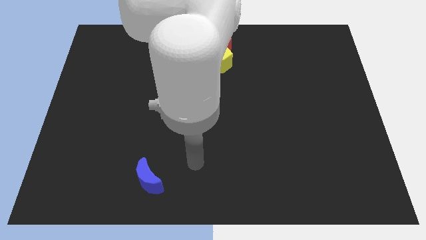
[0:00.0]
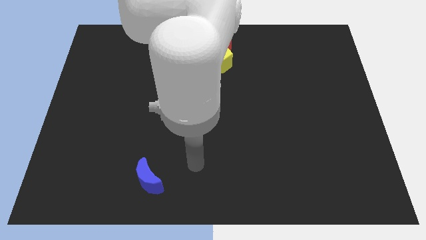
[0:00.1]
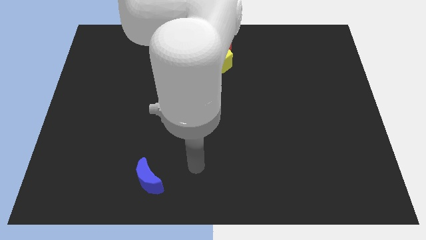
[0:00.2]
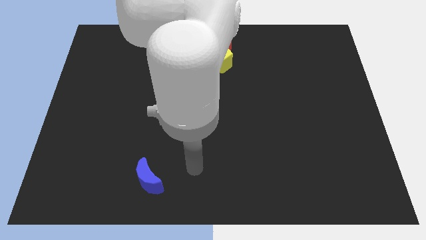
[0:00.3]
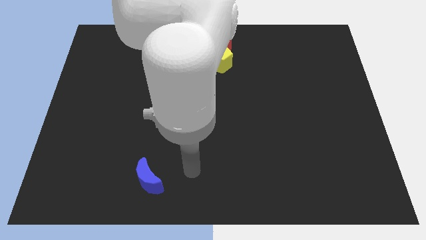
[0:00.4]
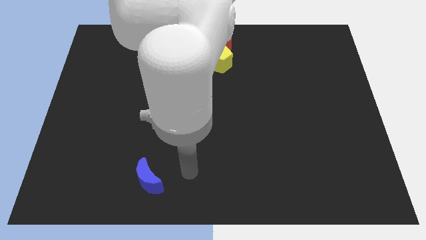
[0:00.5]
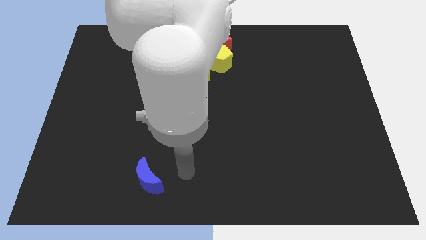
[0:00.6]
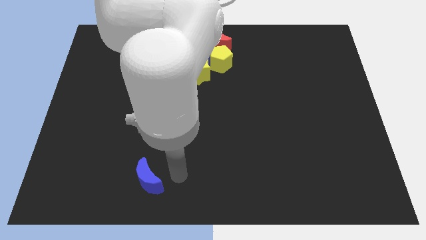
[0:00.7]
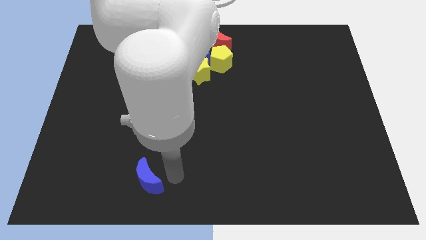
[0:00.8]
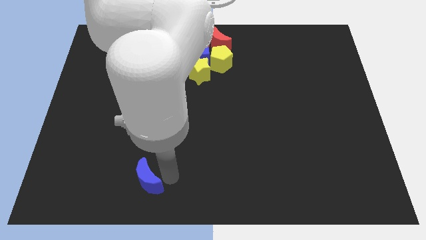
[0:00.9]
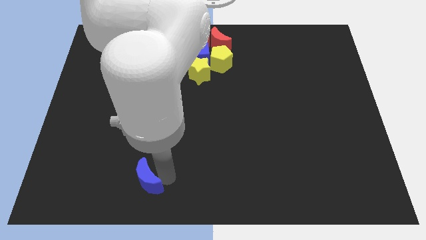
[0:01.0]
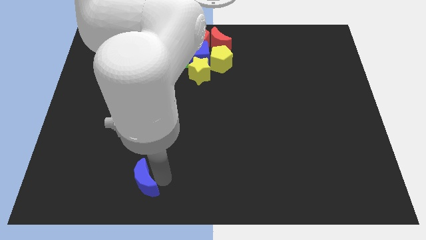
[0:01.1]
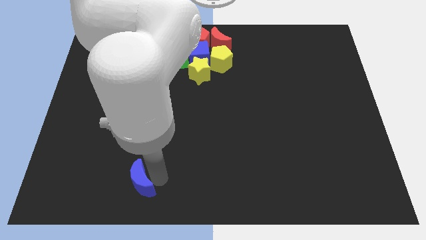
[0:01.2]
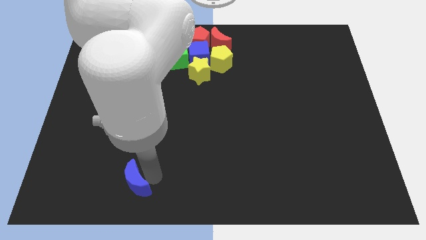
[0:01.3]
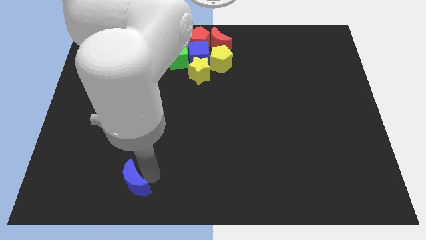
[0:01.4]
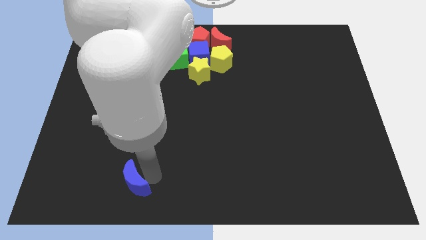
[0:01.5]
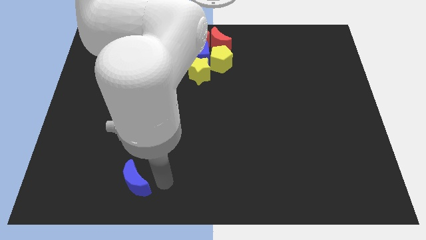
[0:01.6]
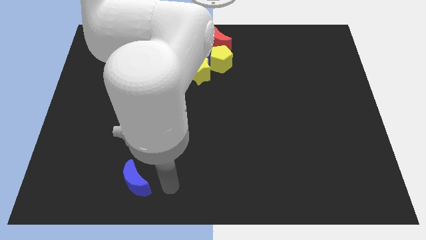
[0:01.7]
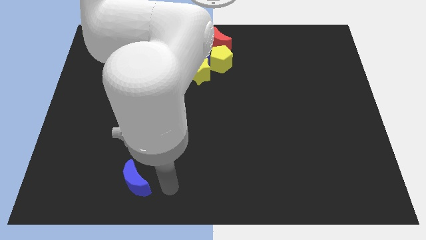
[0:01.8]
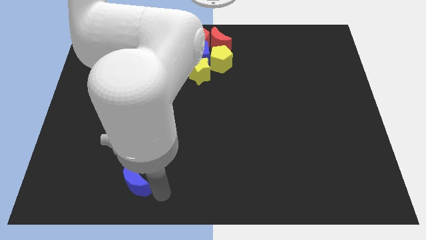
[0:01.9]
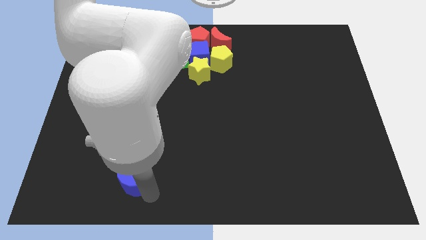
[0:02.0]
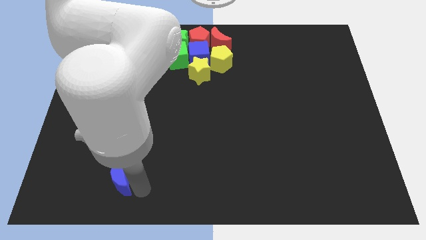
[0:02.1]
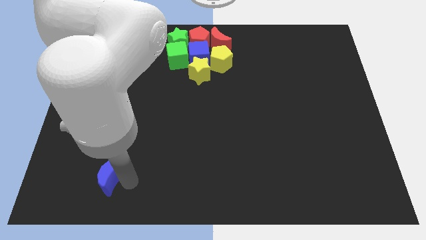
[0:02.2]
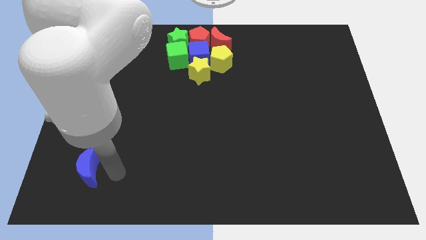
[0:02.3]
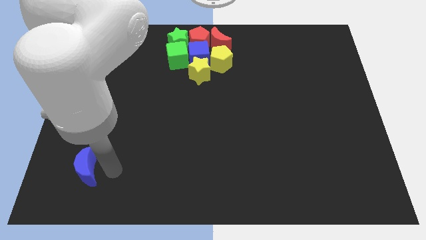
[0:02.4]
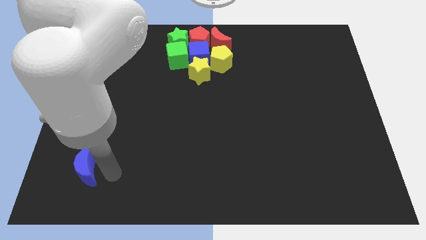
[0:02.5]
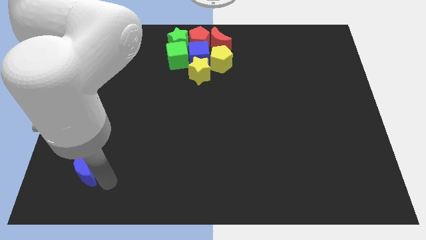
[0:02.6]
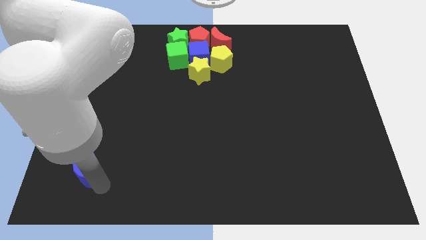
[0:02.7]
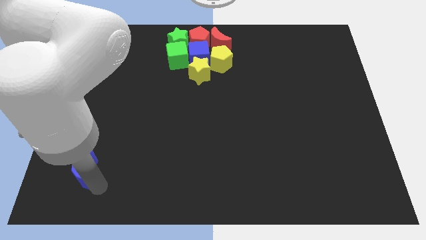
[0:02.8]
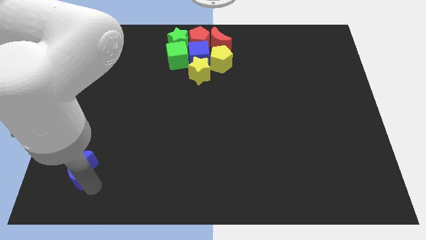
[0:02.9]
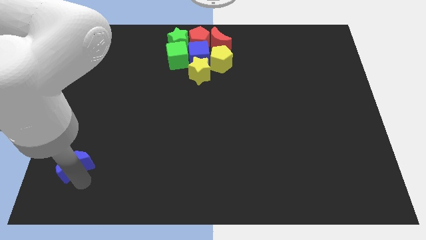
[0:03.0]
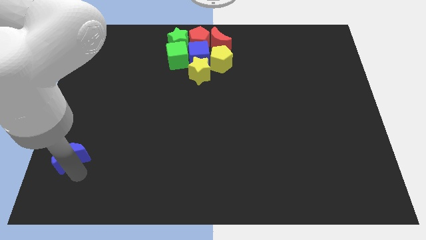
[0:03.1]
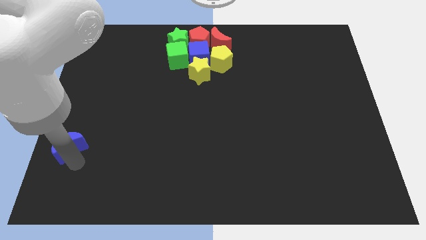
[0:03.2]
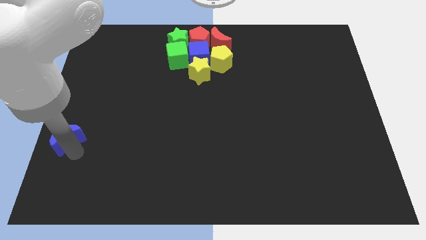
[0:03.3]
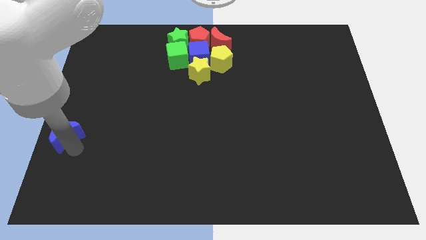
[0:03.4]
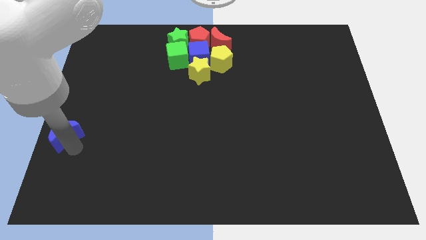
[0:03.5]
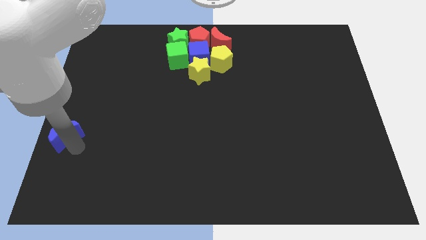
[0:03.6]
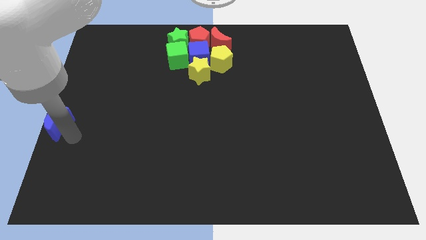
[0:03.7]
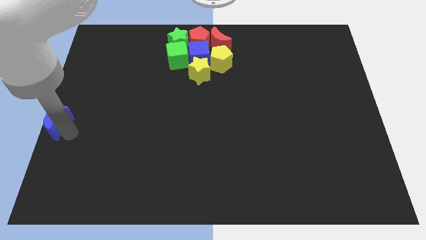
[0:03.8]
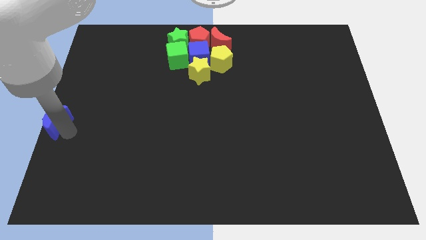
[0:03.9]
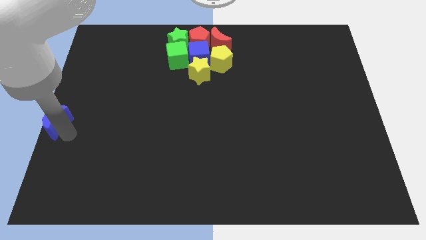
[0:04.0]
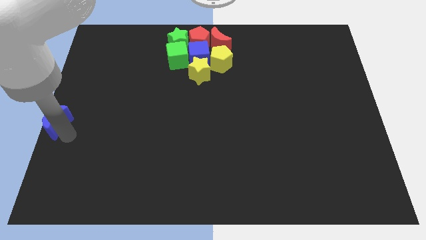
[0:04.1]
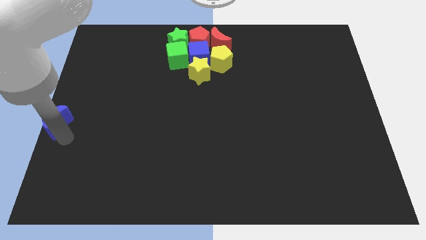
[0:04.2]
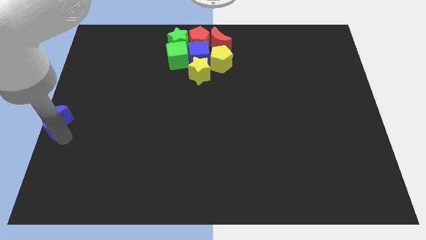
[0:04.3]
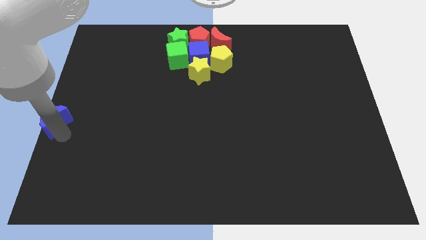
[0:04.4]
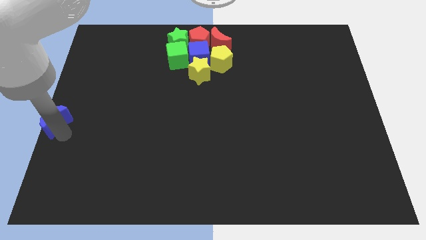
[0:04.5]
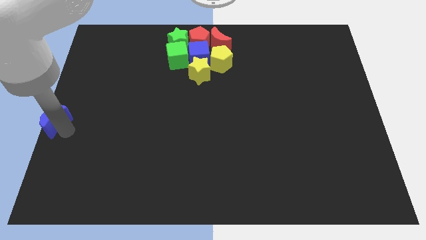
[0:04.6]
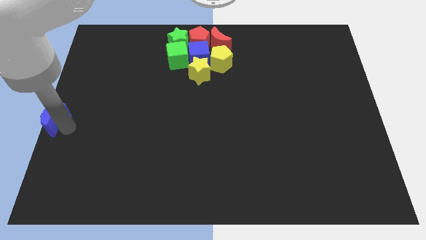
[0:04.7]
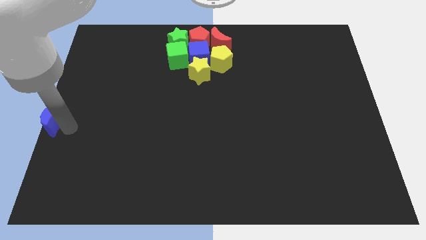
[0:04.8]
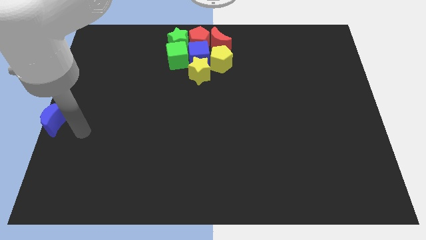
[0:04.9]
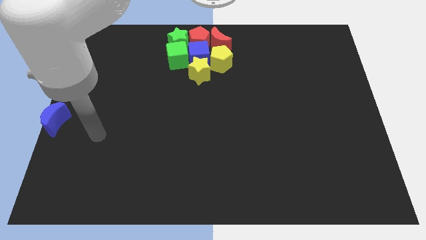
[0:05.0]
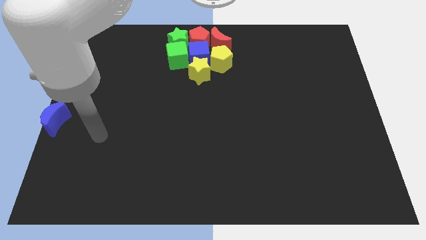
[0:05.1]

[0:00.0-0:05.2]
move blue moon to the center left

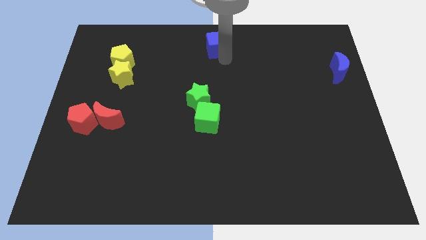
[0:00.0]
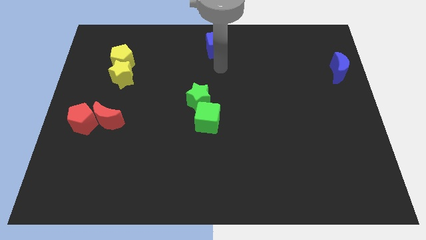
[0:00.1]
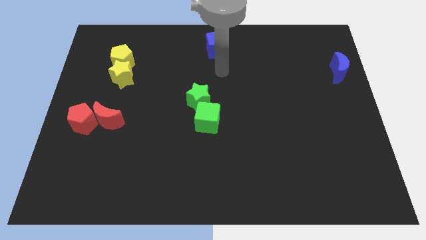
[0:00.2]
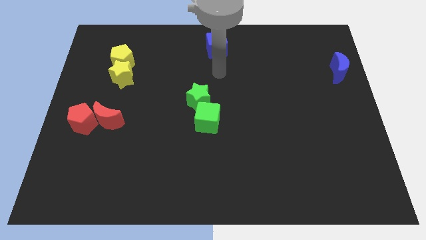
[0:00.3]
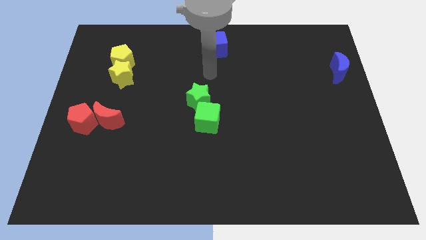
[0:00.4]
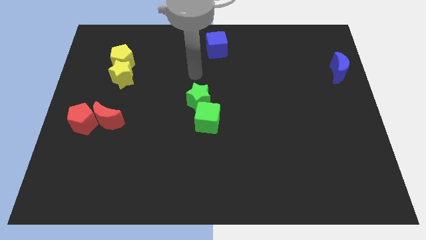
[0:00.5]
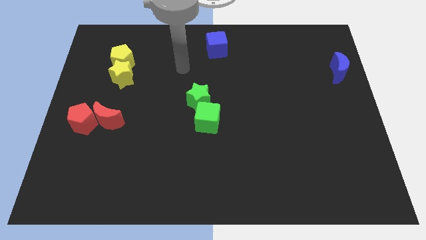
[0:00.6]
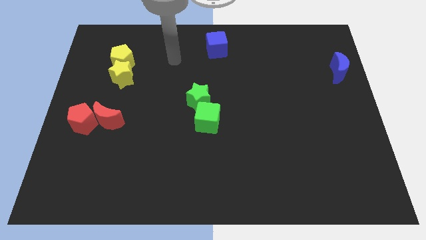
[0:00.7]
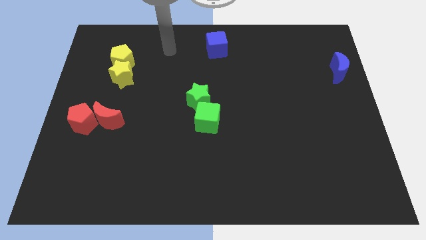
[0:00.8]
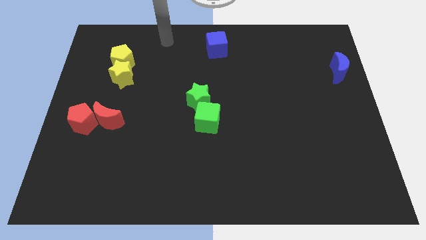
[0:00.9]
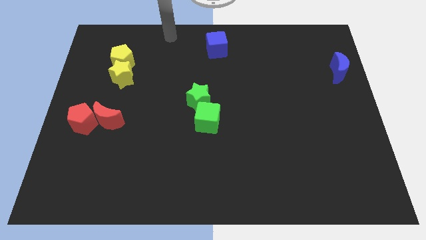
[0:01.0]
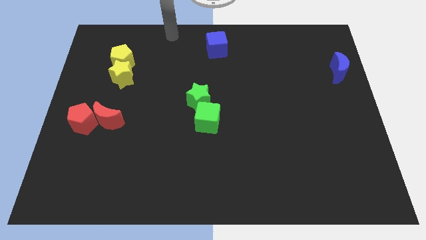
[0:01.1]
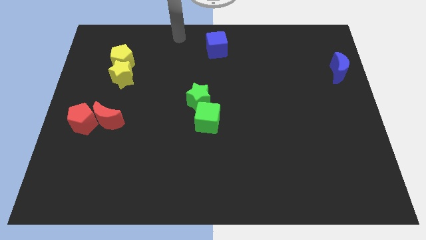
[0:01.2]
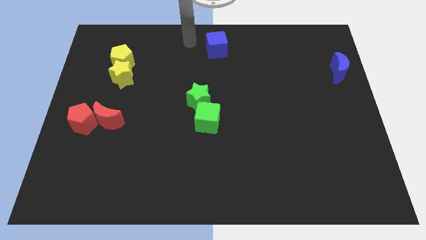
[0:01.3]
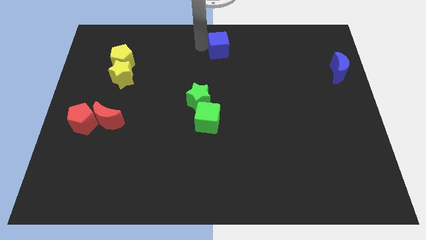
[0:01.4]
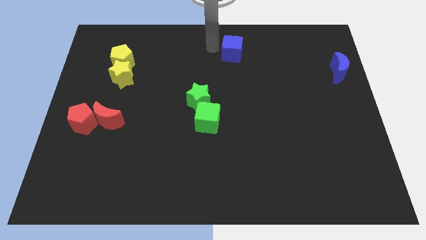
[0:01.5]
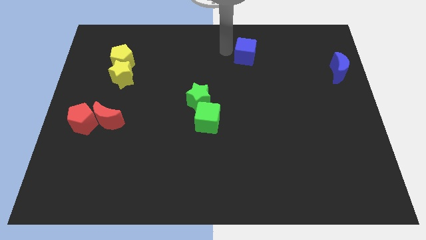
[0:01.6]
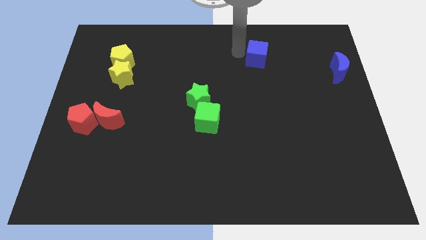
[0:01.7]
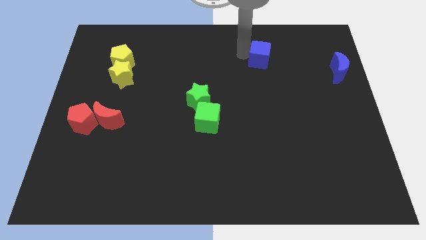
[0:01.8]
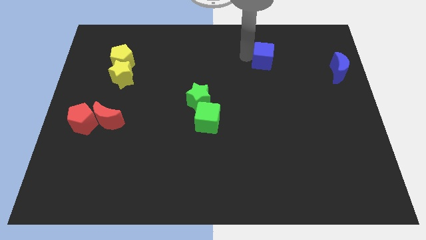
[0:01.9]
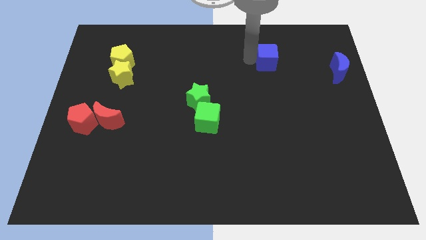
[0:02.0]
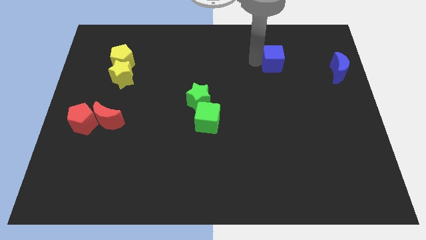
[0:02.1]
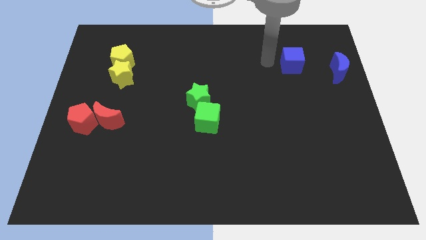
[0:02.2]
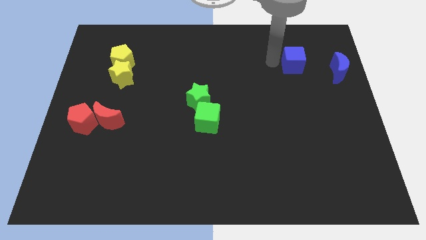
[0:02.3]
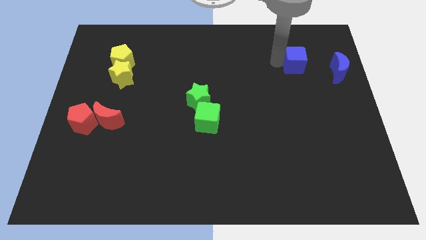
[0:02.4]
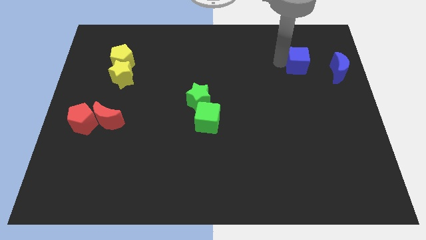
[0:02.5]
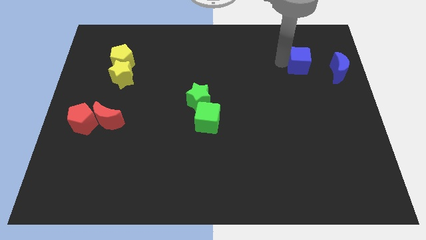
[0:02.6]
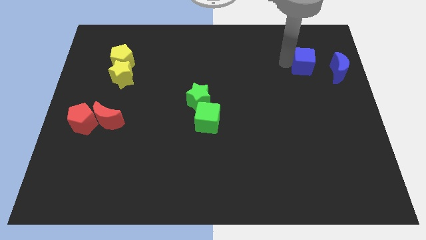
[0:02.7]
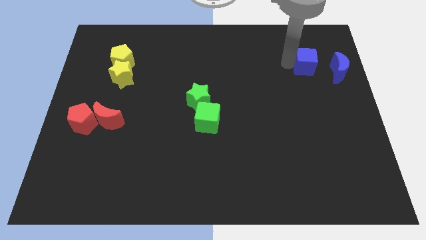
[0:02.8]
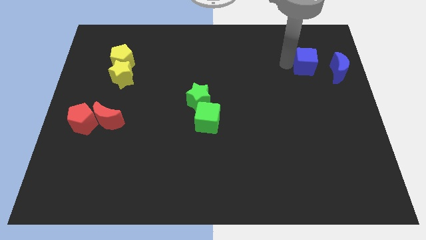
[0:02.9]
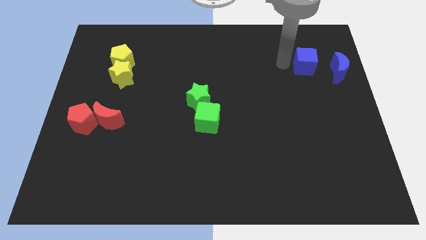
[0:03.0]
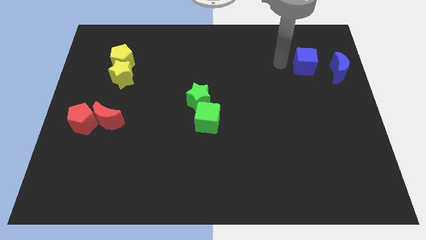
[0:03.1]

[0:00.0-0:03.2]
move blue cube towards the blue moon

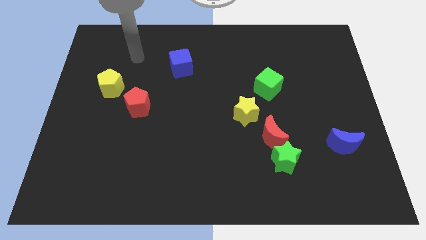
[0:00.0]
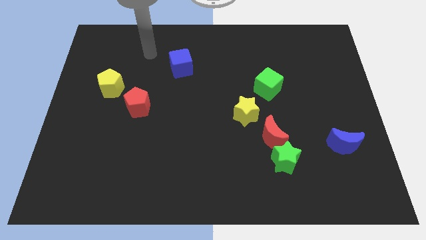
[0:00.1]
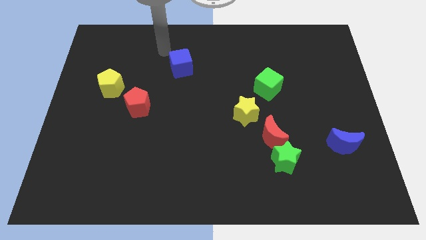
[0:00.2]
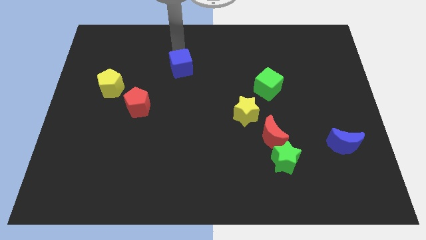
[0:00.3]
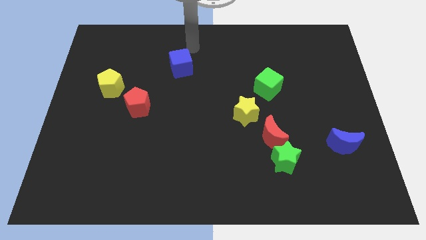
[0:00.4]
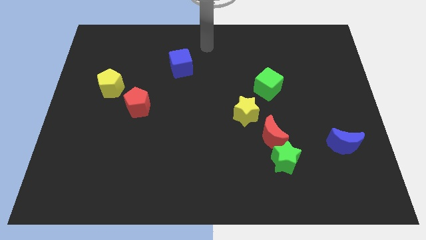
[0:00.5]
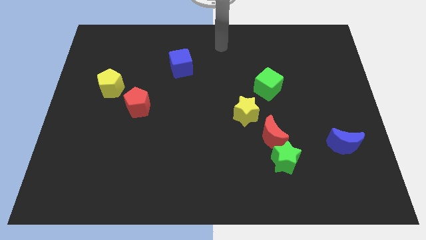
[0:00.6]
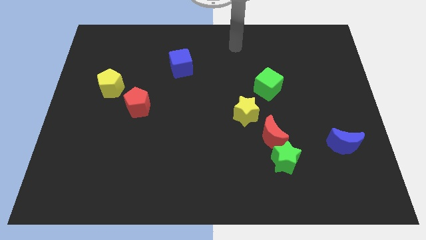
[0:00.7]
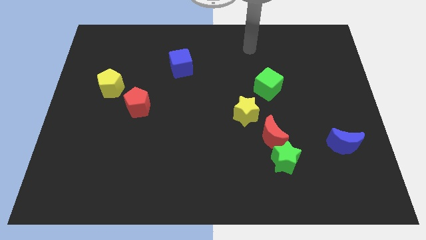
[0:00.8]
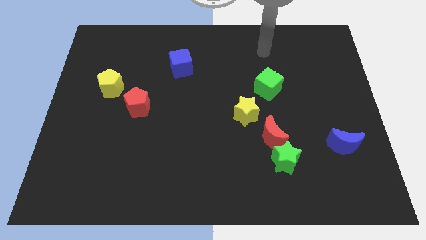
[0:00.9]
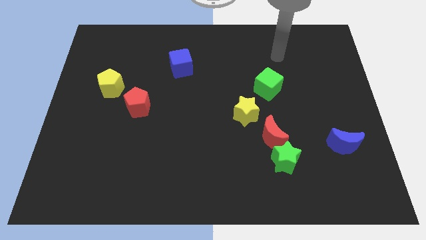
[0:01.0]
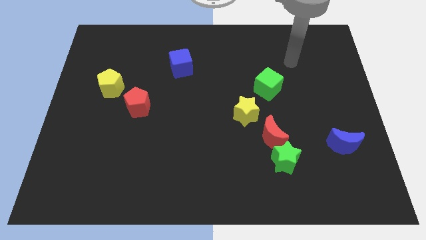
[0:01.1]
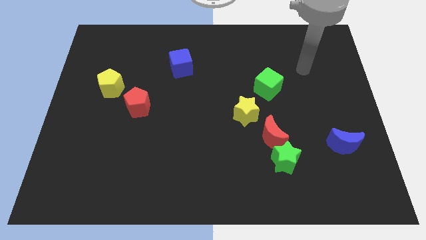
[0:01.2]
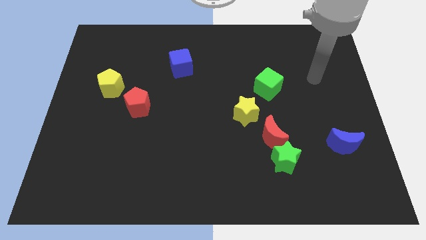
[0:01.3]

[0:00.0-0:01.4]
point your hand at the right side of the green cube
